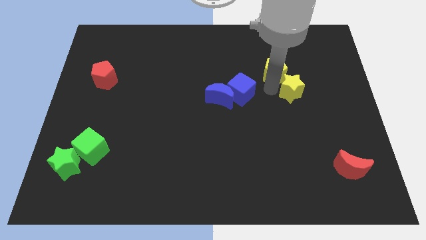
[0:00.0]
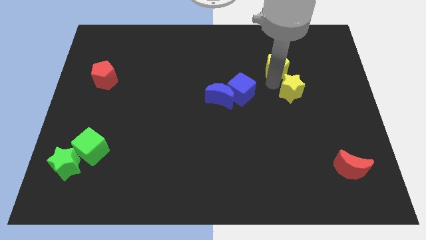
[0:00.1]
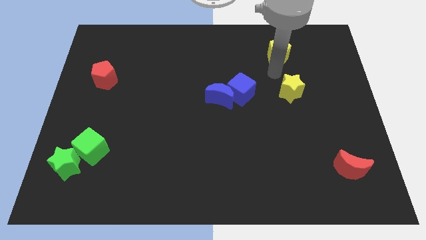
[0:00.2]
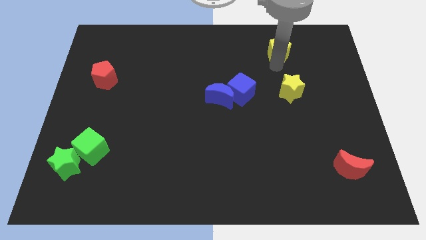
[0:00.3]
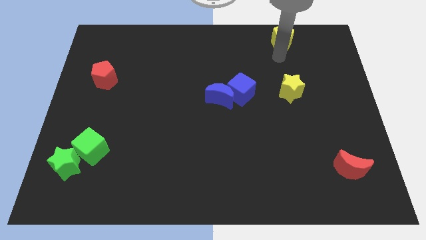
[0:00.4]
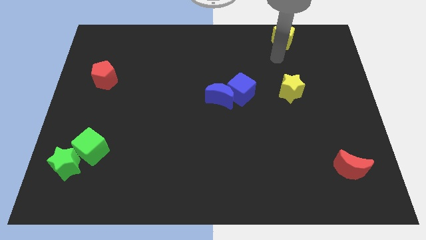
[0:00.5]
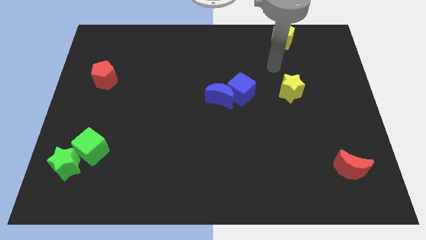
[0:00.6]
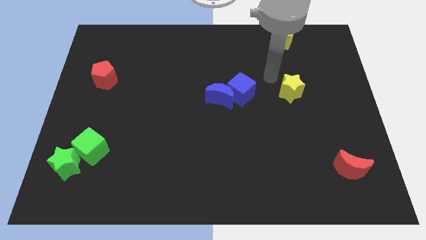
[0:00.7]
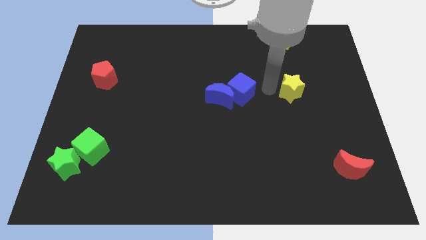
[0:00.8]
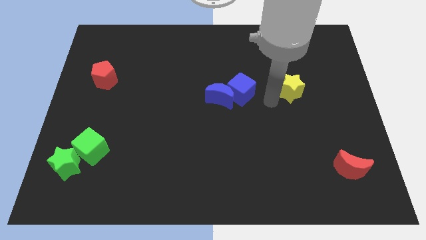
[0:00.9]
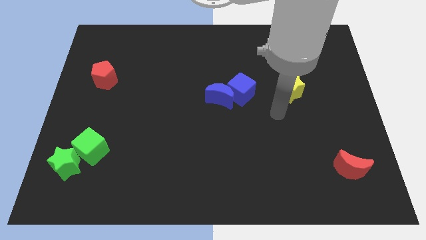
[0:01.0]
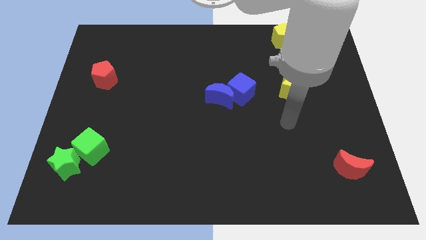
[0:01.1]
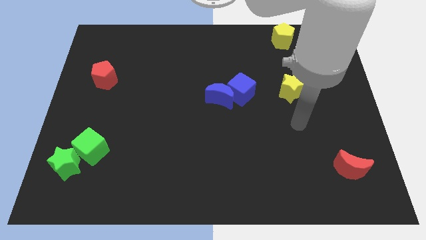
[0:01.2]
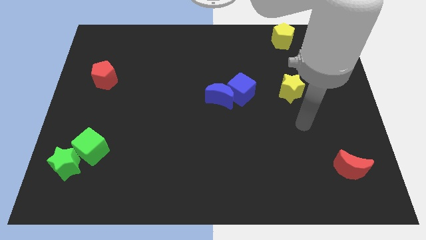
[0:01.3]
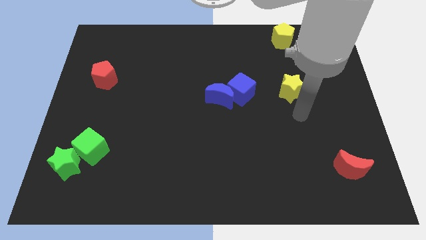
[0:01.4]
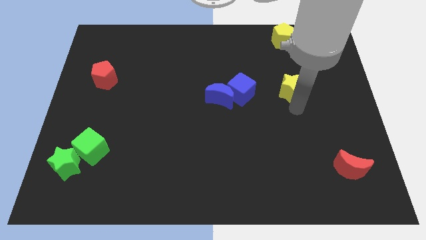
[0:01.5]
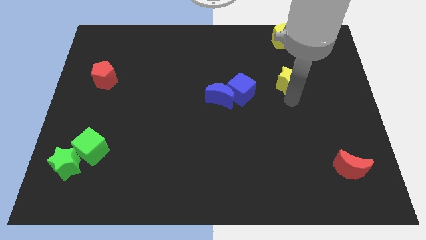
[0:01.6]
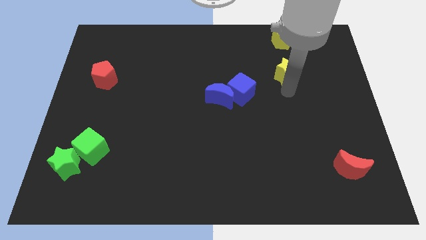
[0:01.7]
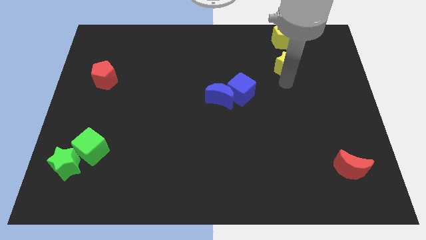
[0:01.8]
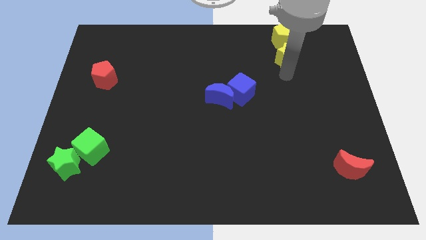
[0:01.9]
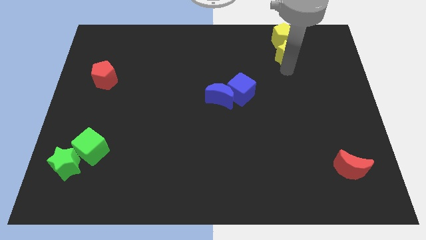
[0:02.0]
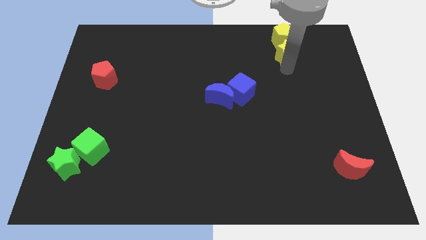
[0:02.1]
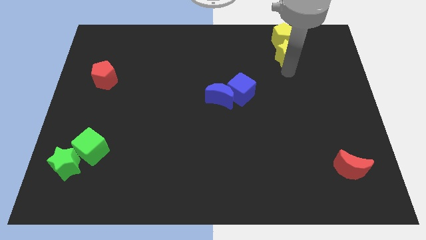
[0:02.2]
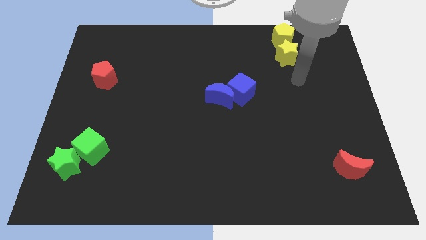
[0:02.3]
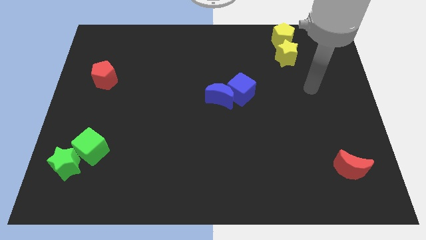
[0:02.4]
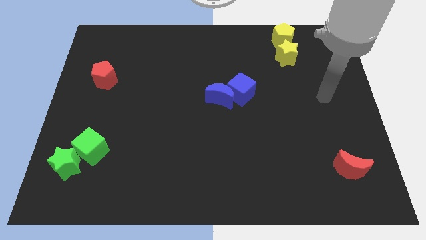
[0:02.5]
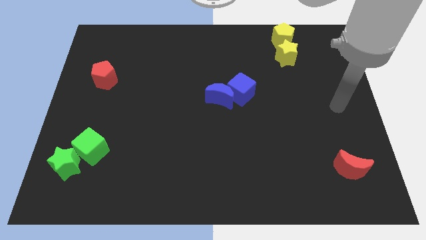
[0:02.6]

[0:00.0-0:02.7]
push the yellow blocks towards the top center

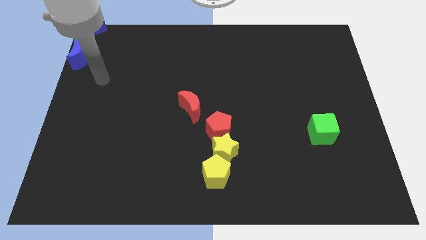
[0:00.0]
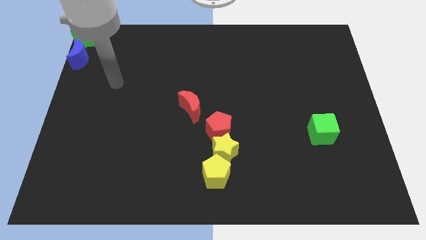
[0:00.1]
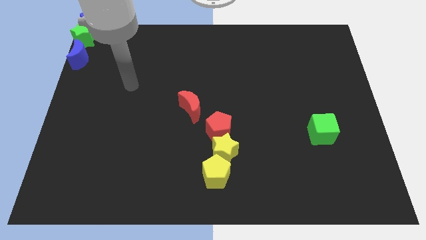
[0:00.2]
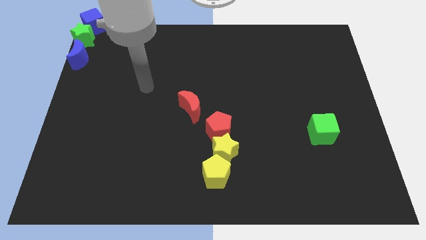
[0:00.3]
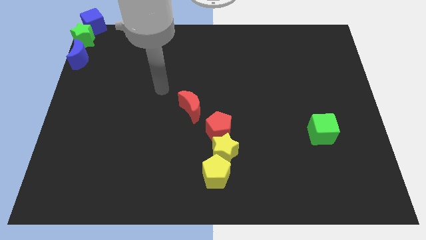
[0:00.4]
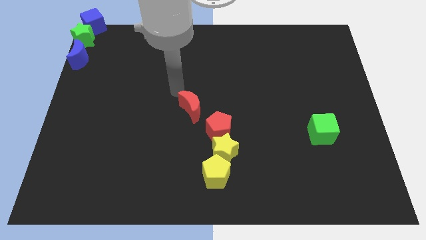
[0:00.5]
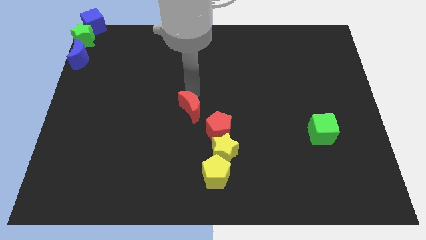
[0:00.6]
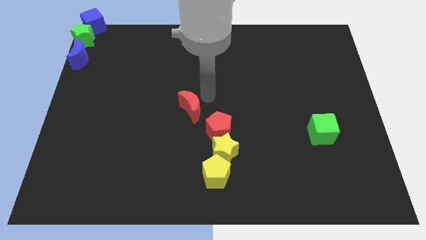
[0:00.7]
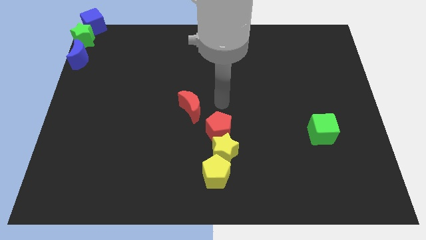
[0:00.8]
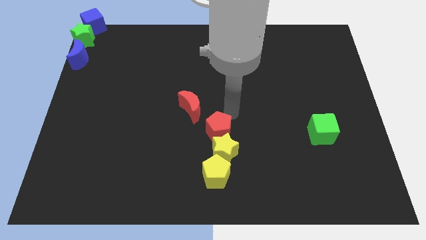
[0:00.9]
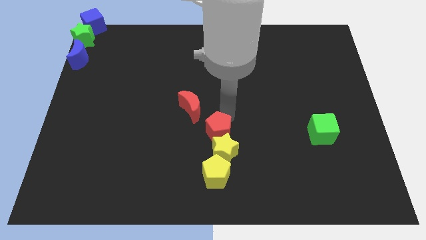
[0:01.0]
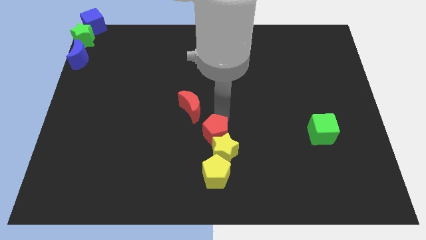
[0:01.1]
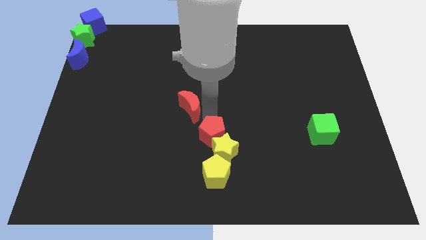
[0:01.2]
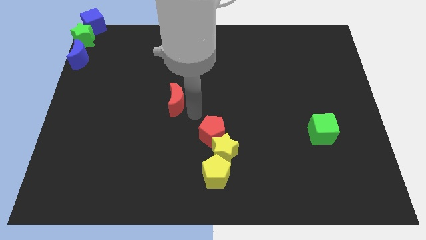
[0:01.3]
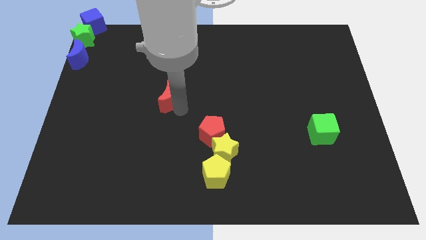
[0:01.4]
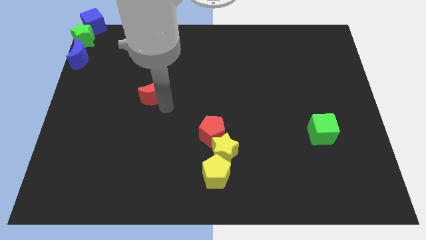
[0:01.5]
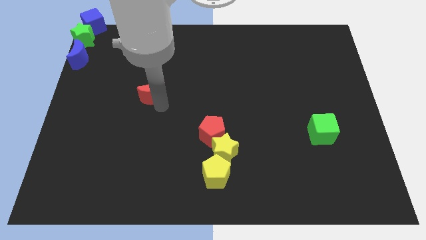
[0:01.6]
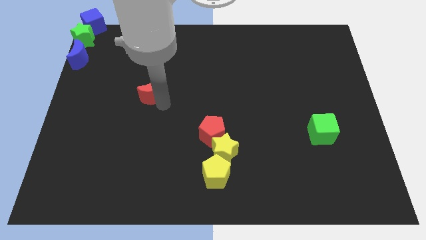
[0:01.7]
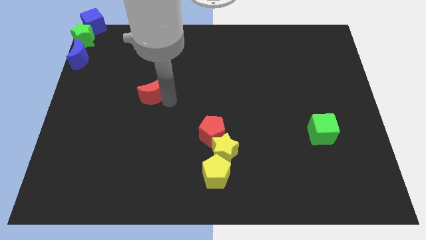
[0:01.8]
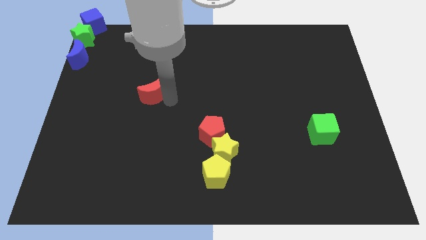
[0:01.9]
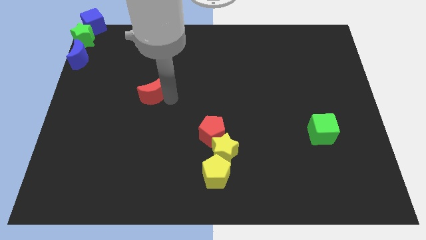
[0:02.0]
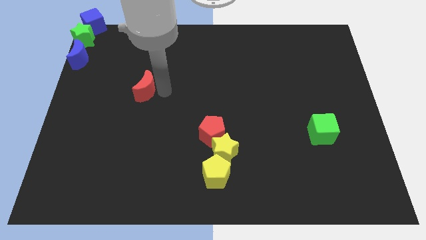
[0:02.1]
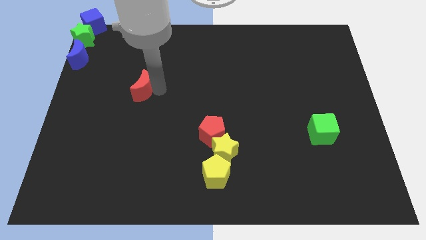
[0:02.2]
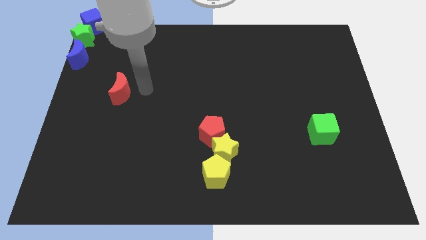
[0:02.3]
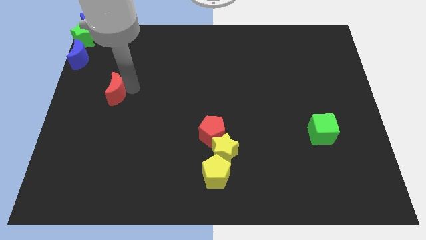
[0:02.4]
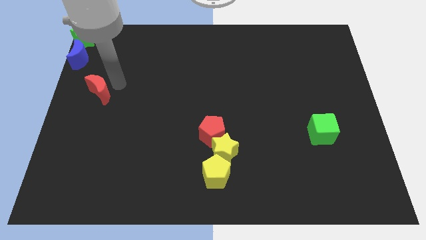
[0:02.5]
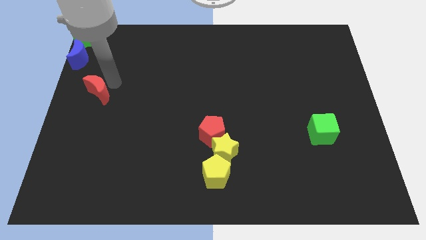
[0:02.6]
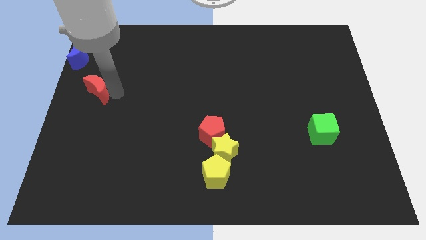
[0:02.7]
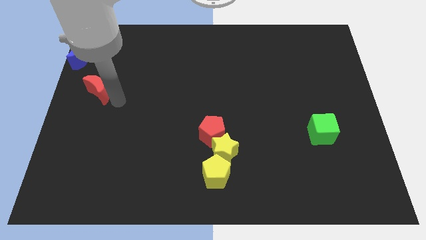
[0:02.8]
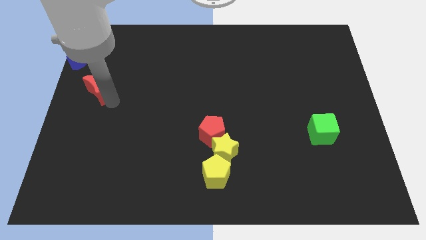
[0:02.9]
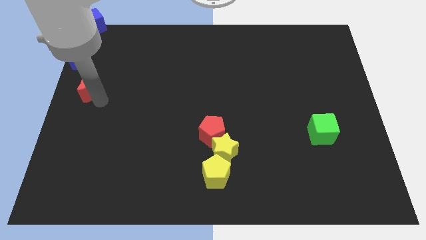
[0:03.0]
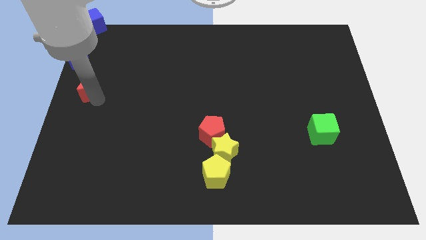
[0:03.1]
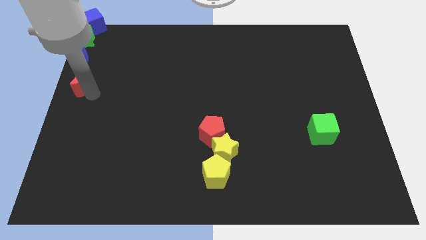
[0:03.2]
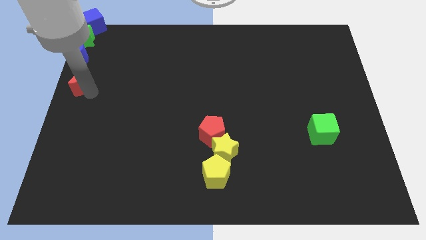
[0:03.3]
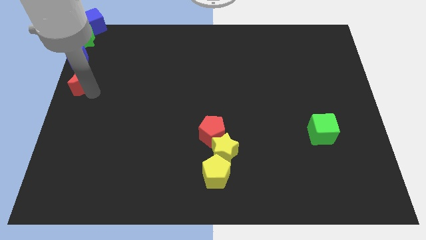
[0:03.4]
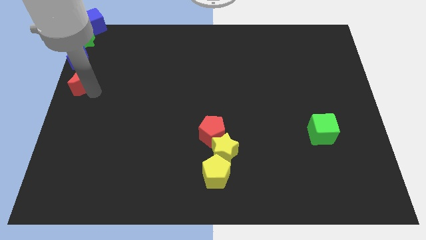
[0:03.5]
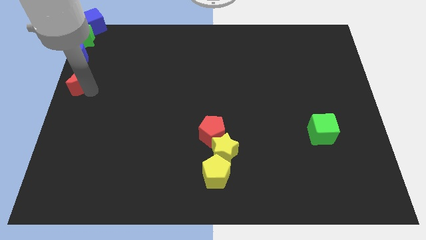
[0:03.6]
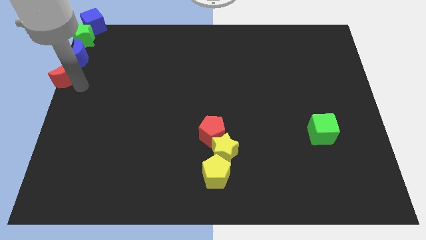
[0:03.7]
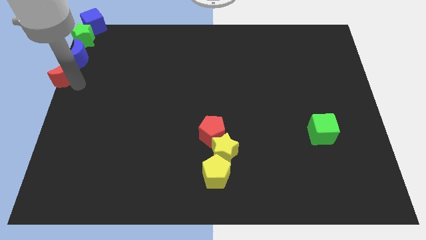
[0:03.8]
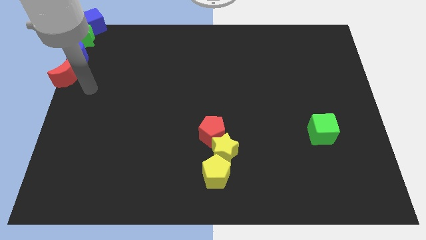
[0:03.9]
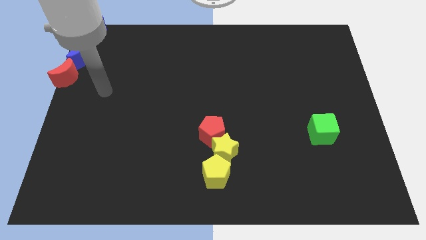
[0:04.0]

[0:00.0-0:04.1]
place the red crescent under the blue crescent

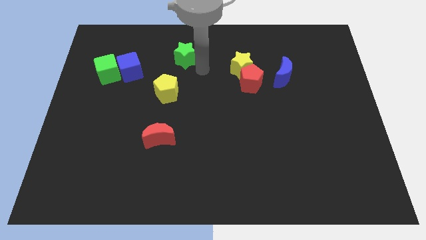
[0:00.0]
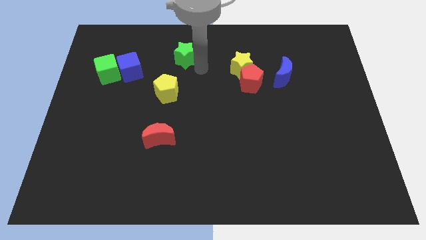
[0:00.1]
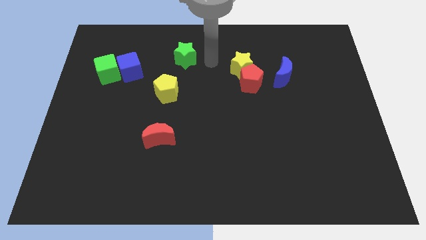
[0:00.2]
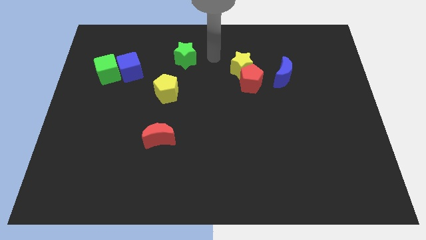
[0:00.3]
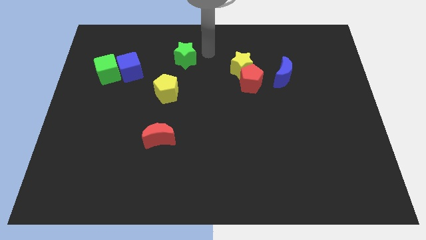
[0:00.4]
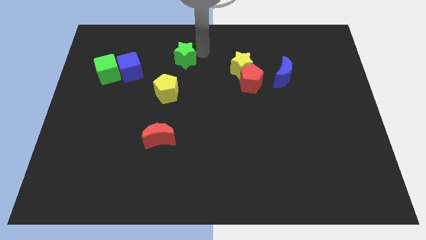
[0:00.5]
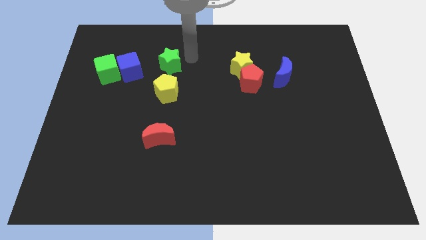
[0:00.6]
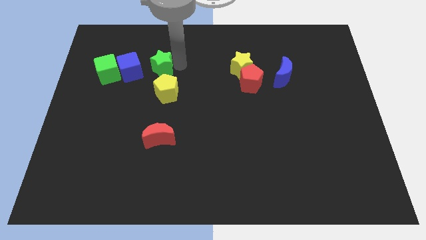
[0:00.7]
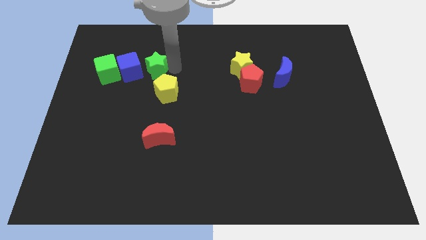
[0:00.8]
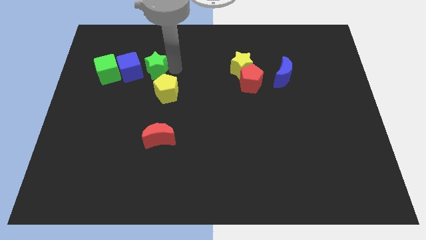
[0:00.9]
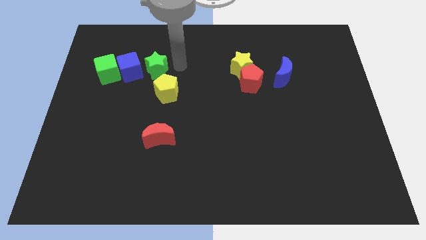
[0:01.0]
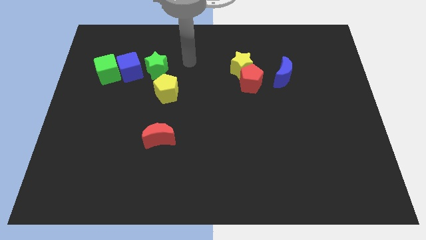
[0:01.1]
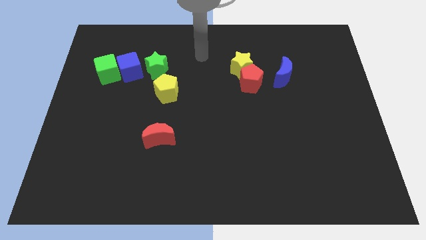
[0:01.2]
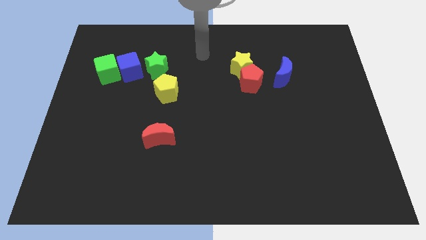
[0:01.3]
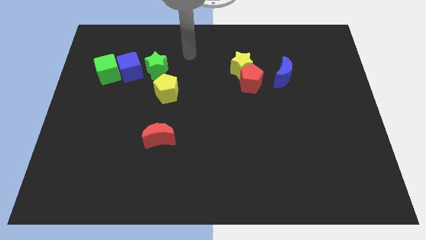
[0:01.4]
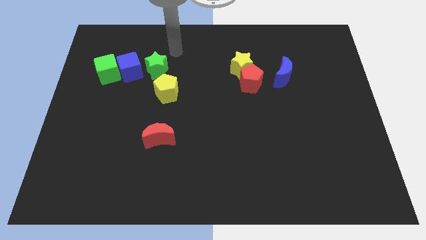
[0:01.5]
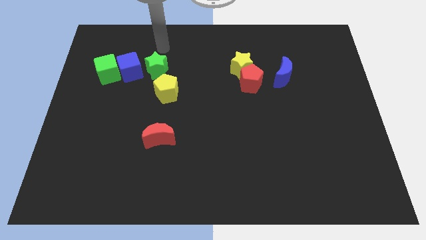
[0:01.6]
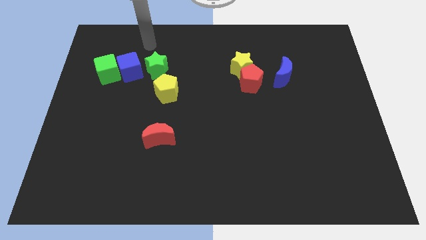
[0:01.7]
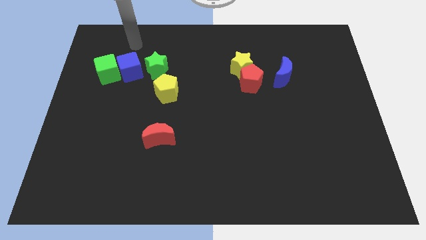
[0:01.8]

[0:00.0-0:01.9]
put the green star to the right of the blue cube

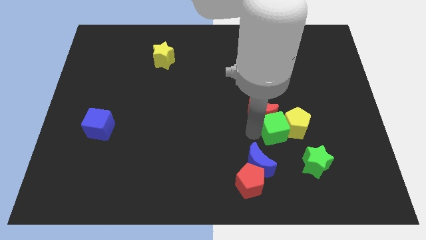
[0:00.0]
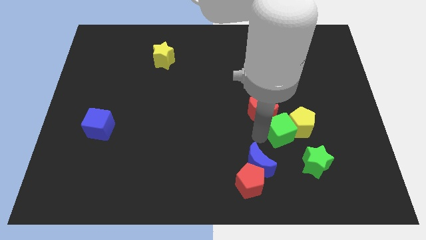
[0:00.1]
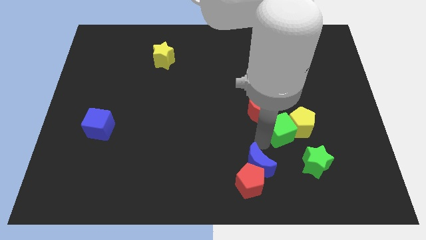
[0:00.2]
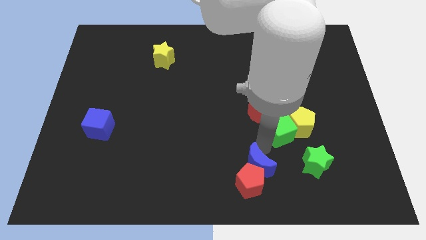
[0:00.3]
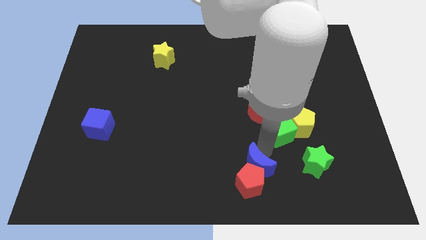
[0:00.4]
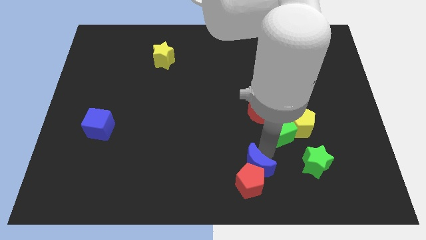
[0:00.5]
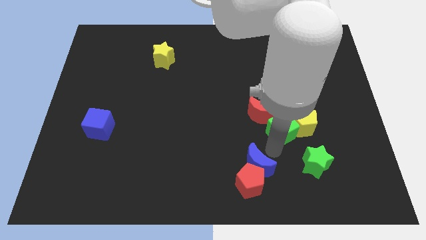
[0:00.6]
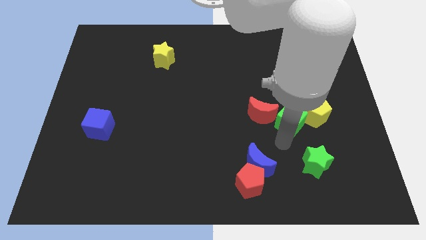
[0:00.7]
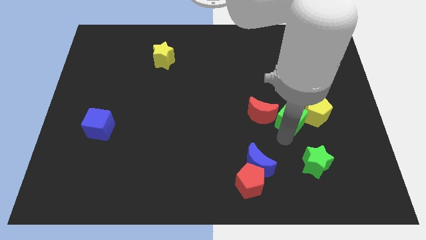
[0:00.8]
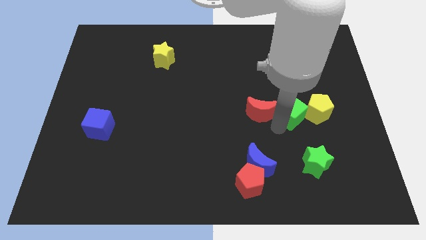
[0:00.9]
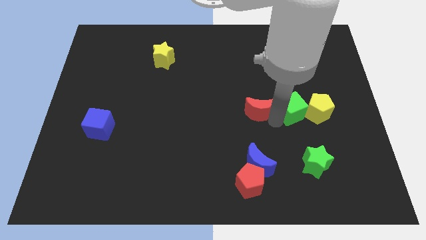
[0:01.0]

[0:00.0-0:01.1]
push green cube in between red moon and yellow pentagon
